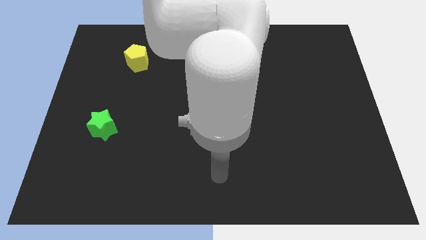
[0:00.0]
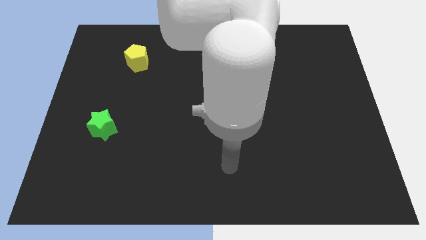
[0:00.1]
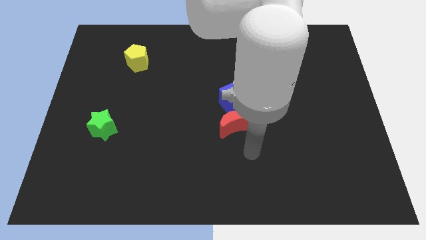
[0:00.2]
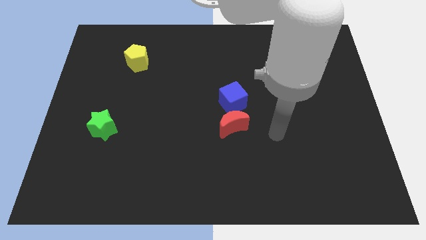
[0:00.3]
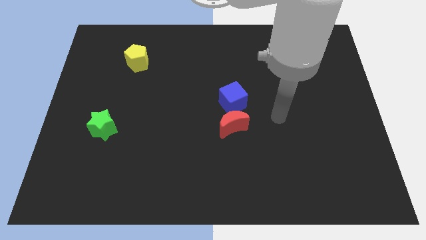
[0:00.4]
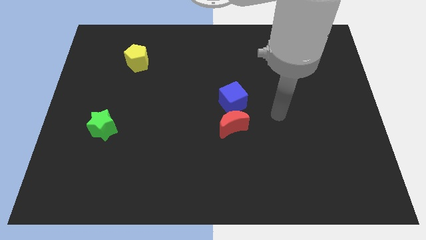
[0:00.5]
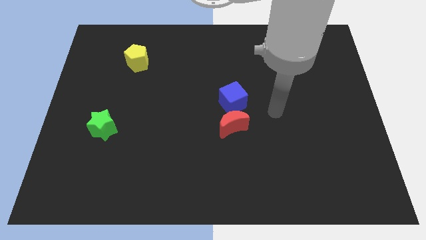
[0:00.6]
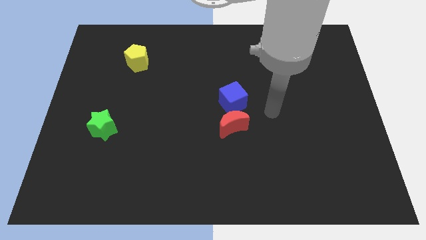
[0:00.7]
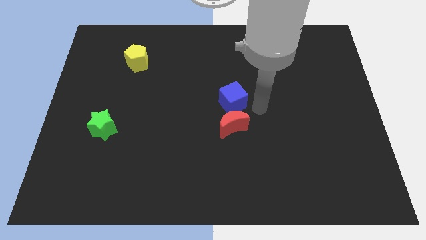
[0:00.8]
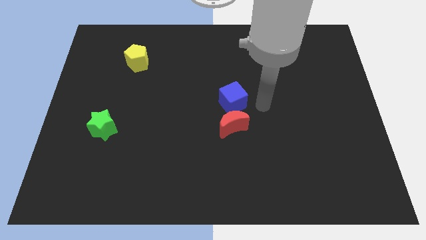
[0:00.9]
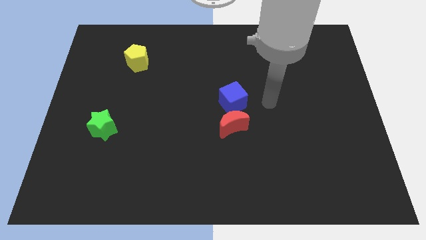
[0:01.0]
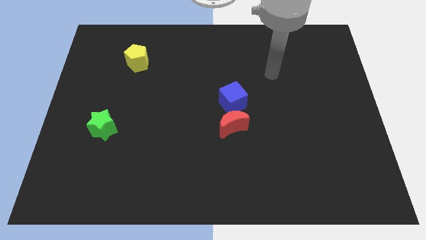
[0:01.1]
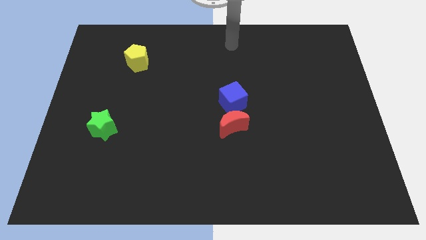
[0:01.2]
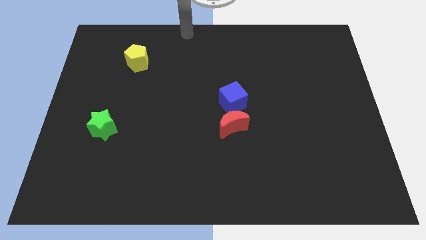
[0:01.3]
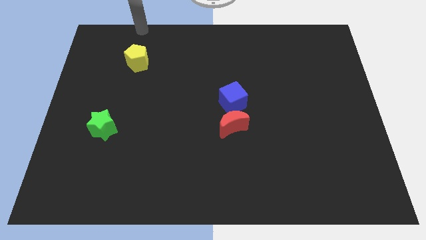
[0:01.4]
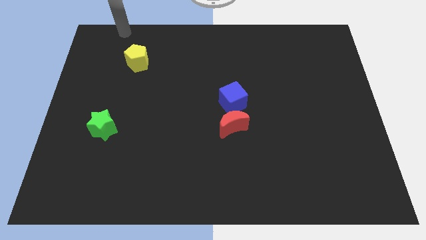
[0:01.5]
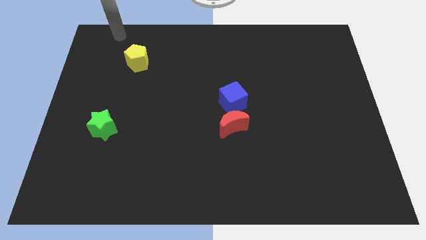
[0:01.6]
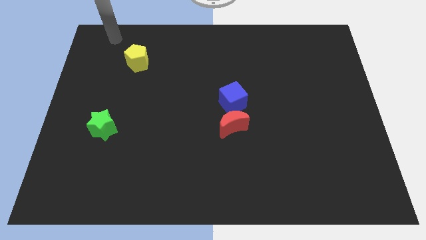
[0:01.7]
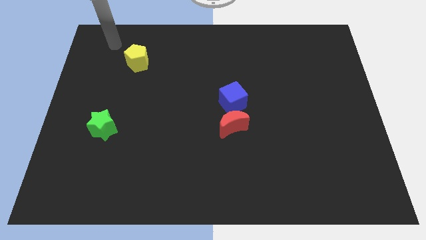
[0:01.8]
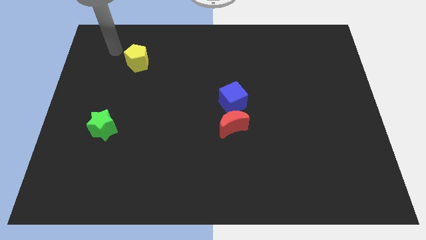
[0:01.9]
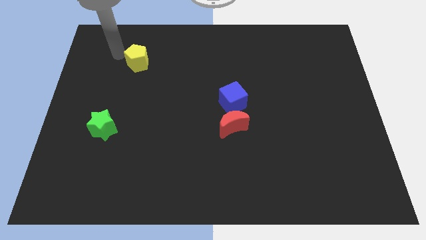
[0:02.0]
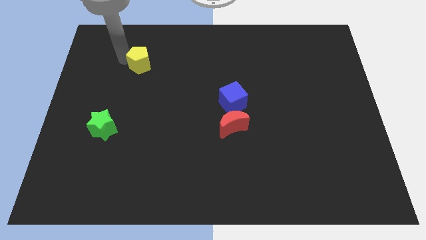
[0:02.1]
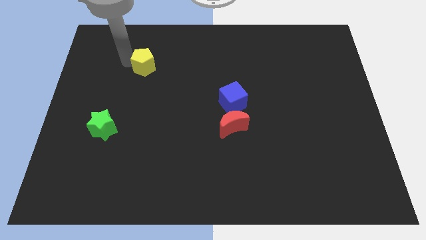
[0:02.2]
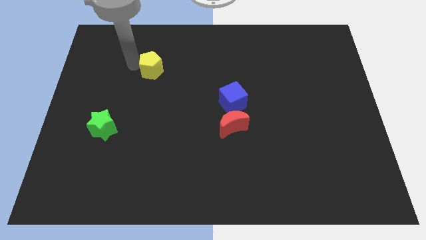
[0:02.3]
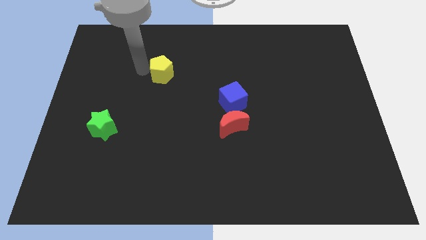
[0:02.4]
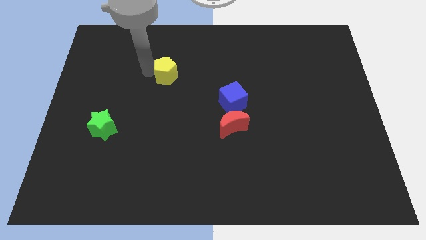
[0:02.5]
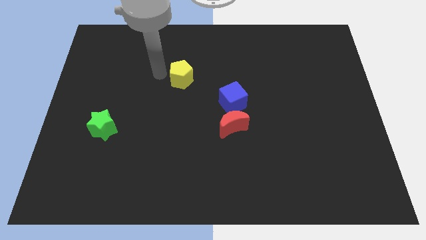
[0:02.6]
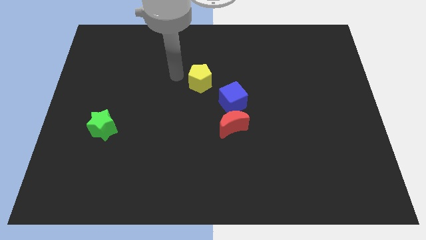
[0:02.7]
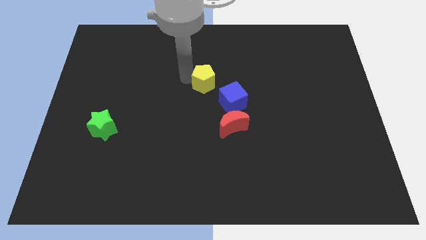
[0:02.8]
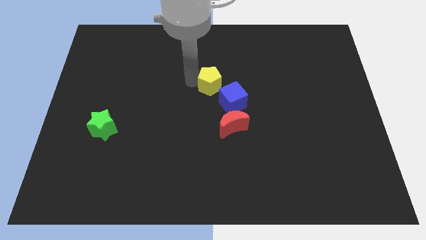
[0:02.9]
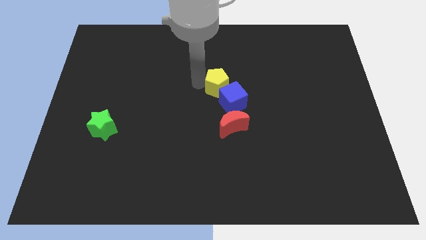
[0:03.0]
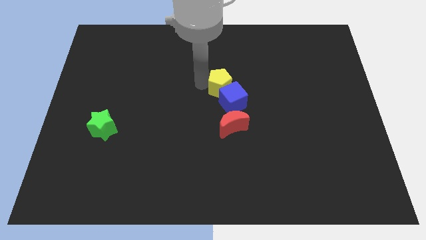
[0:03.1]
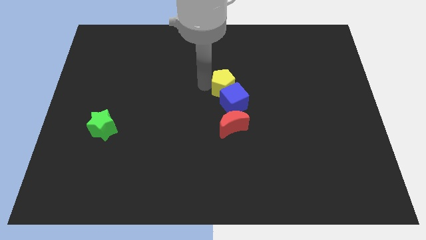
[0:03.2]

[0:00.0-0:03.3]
push the yellow block towards the blue block

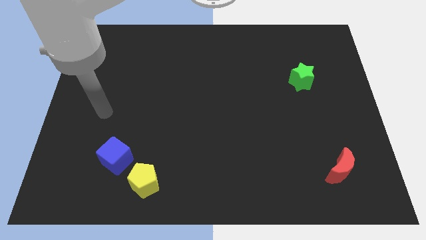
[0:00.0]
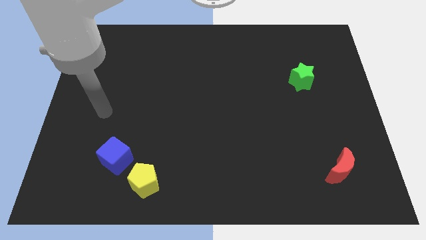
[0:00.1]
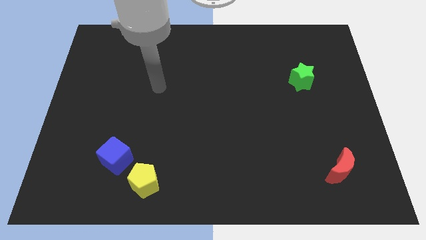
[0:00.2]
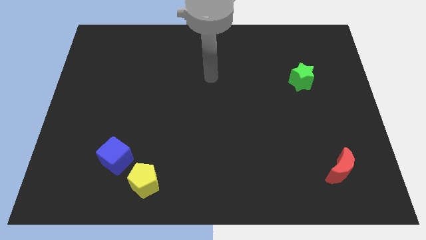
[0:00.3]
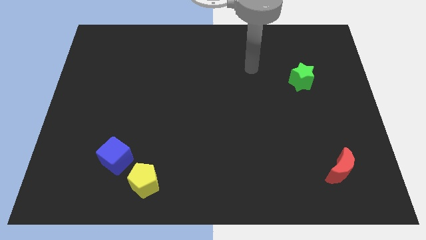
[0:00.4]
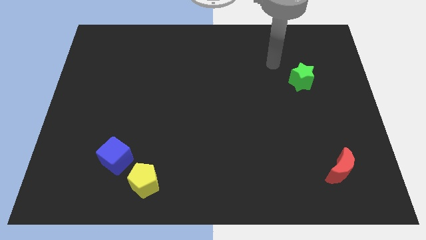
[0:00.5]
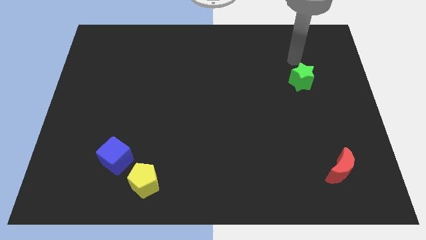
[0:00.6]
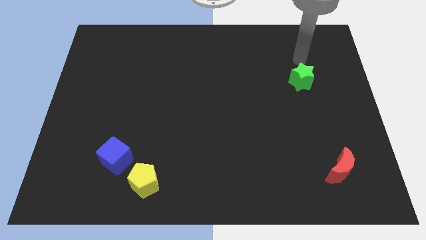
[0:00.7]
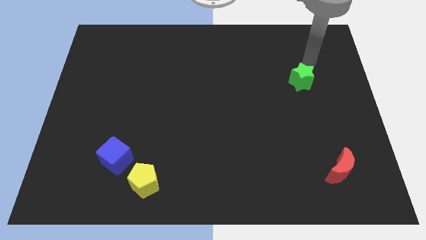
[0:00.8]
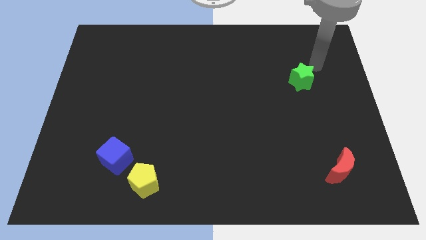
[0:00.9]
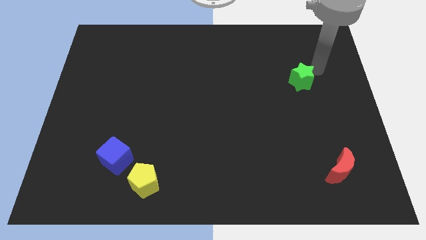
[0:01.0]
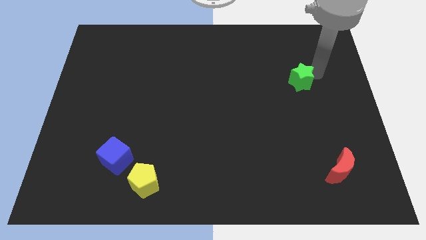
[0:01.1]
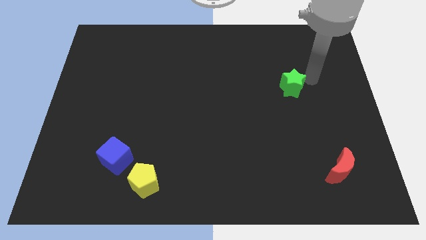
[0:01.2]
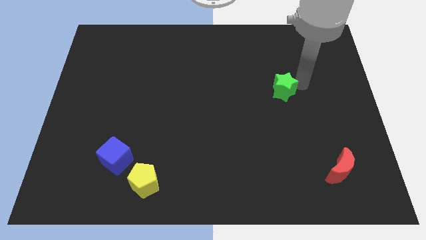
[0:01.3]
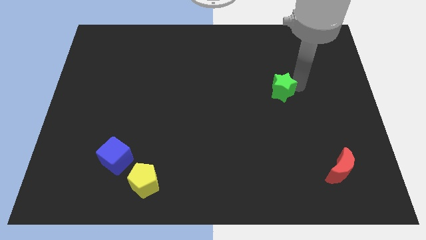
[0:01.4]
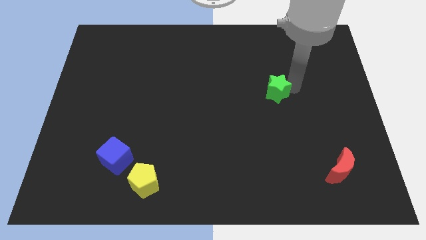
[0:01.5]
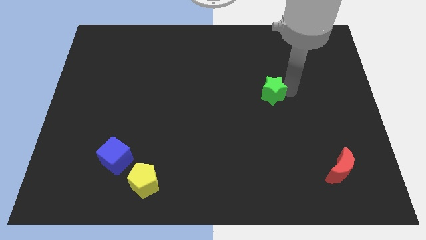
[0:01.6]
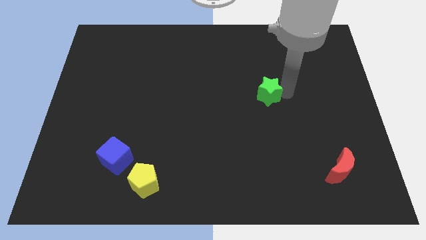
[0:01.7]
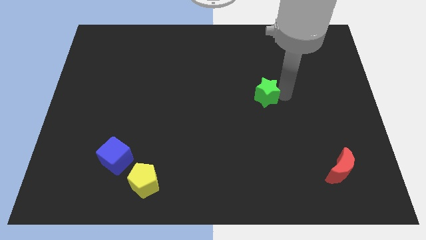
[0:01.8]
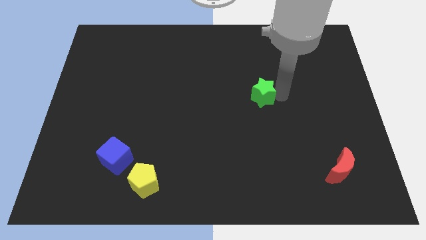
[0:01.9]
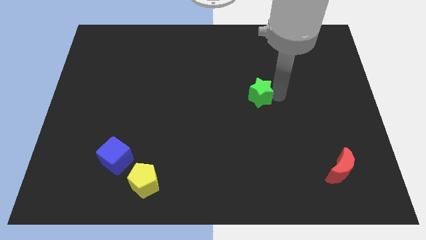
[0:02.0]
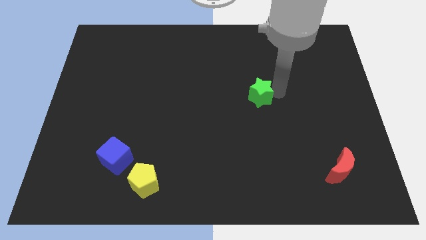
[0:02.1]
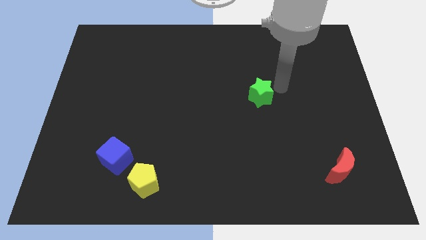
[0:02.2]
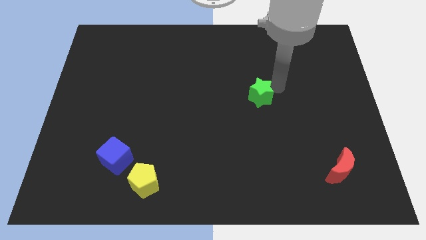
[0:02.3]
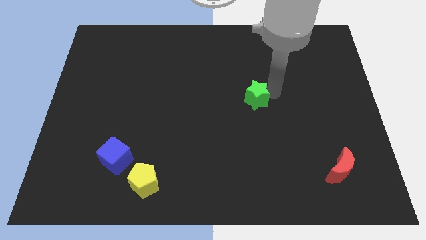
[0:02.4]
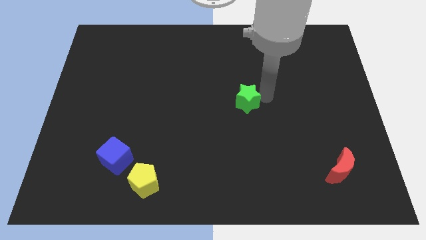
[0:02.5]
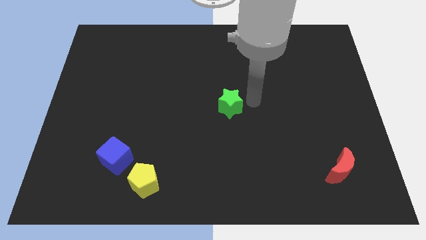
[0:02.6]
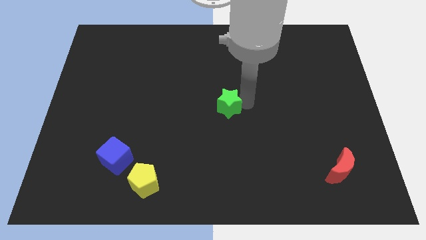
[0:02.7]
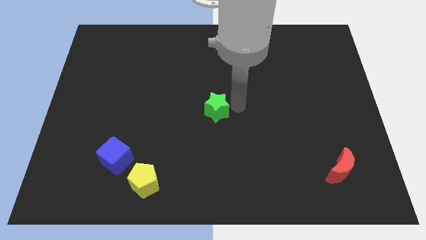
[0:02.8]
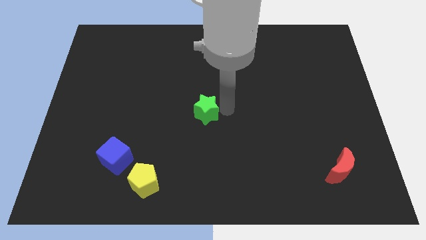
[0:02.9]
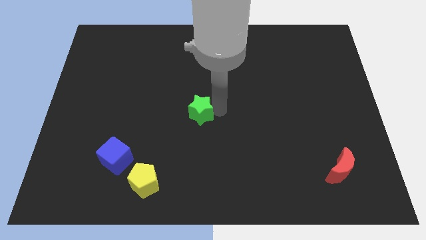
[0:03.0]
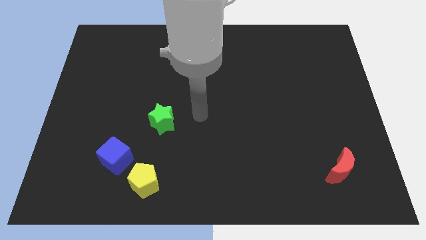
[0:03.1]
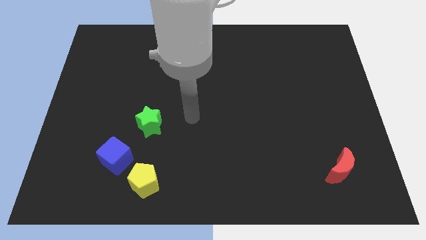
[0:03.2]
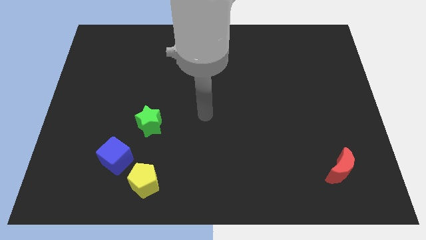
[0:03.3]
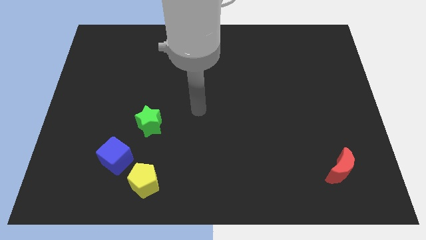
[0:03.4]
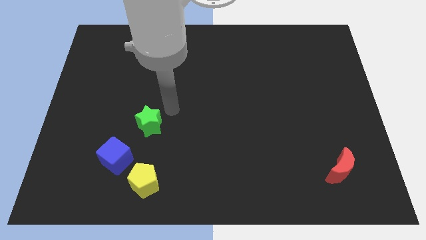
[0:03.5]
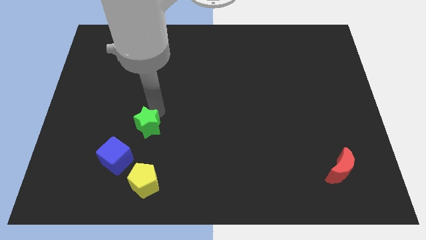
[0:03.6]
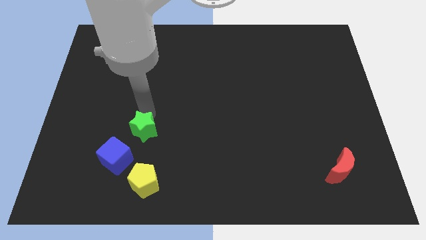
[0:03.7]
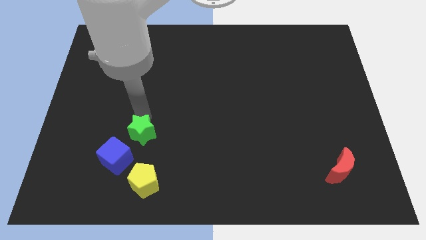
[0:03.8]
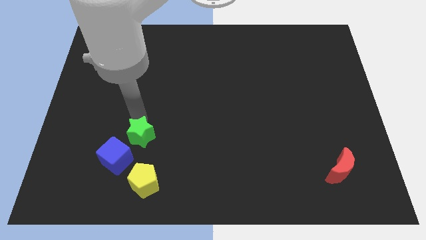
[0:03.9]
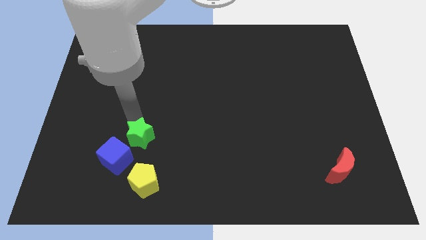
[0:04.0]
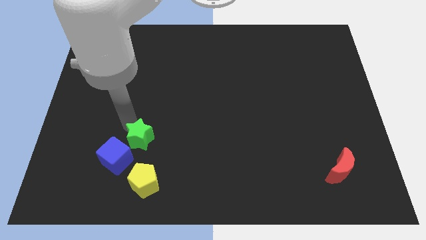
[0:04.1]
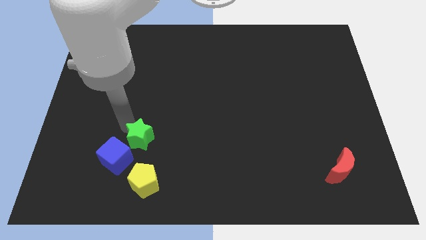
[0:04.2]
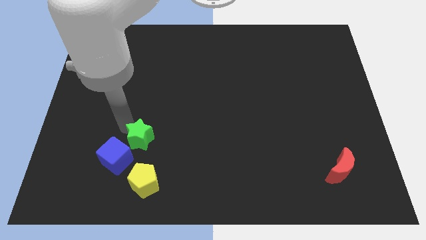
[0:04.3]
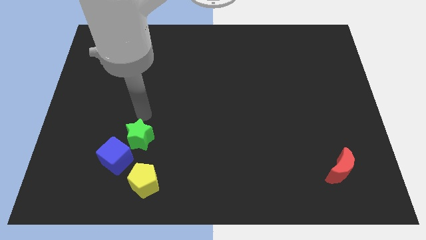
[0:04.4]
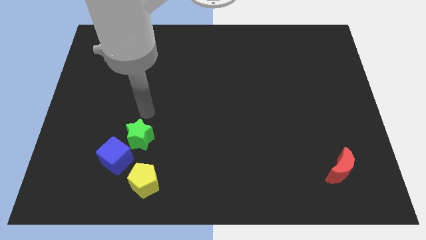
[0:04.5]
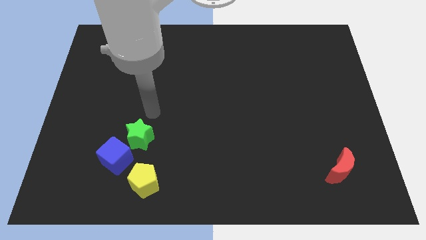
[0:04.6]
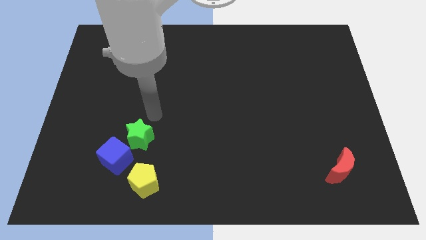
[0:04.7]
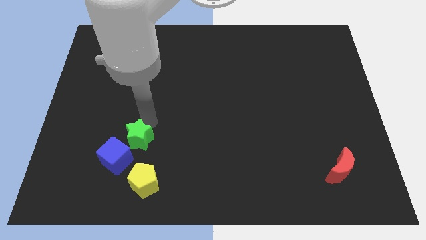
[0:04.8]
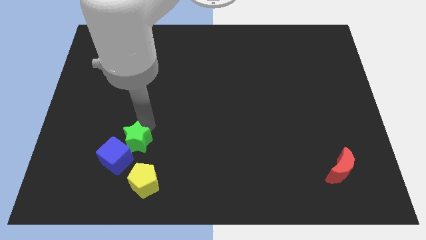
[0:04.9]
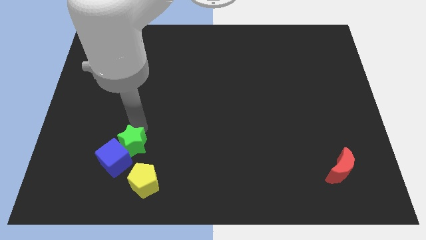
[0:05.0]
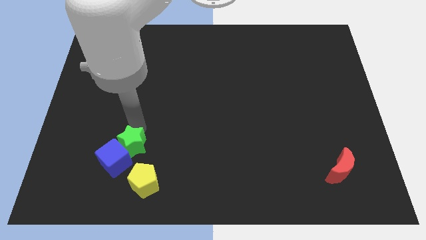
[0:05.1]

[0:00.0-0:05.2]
move the green block to the cube
